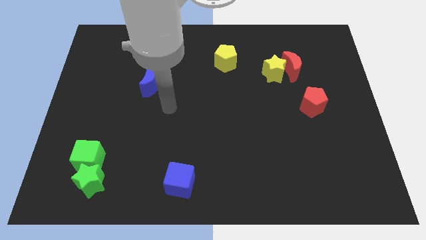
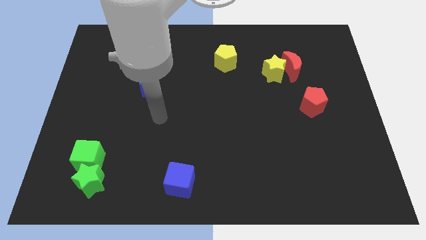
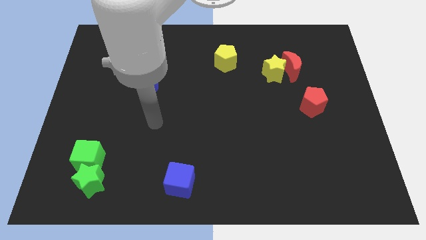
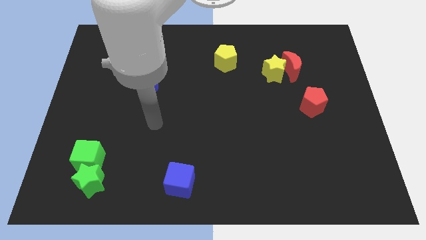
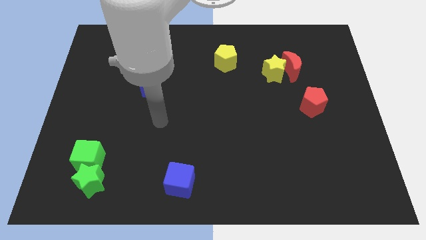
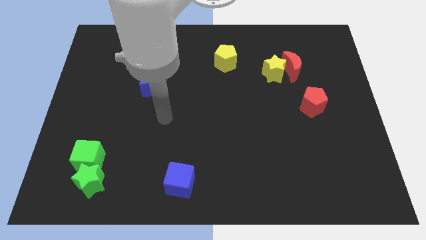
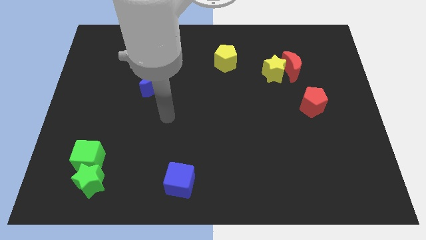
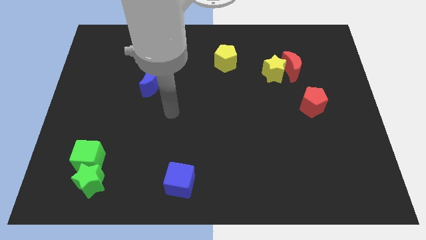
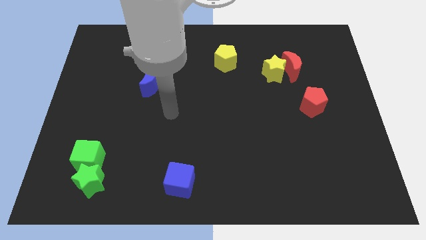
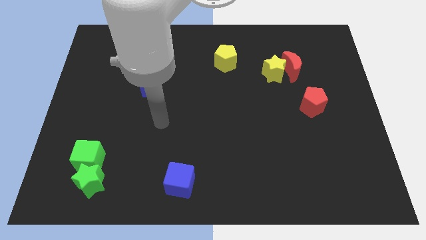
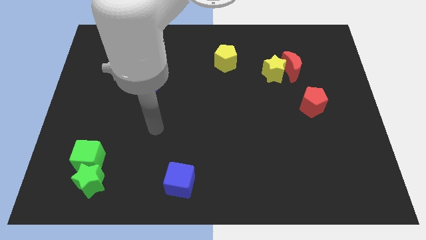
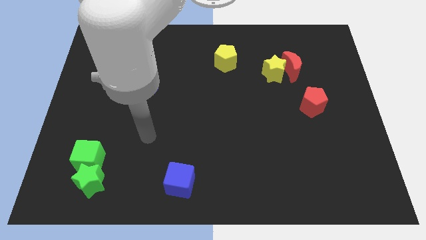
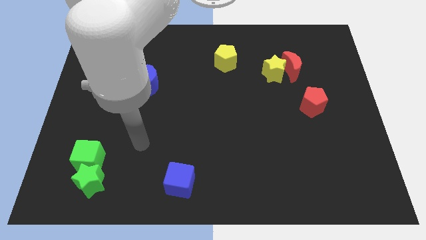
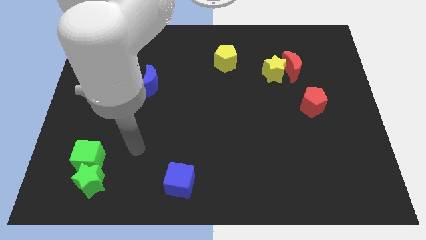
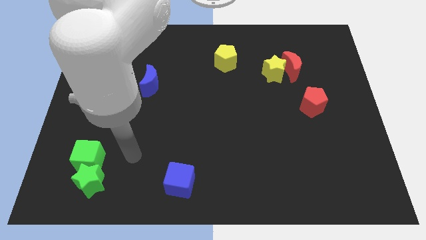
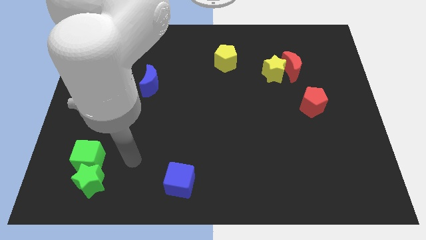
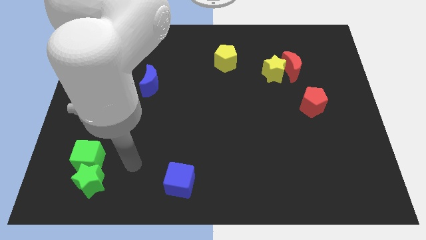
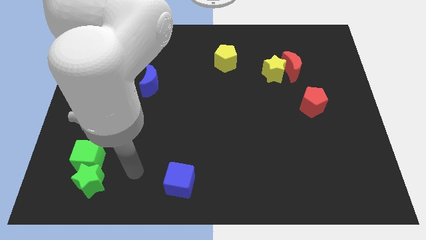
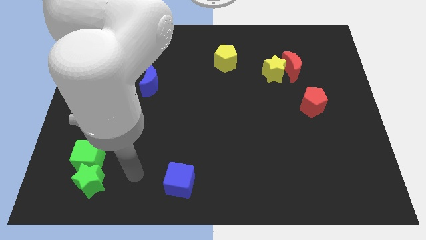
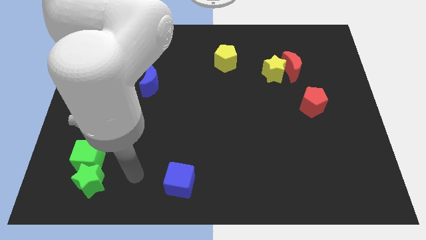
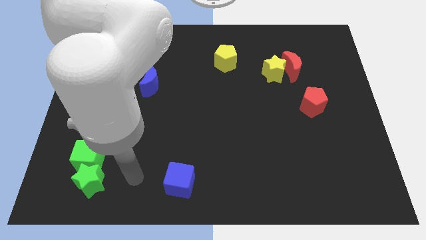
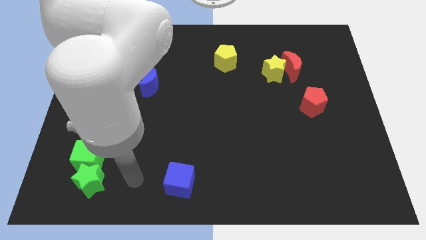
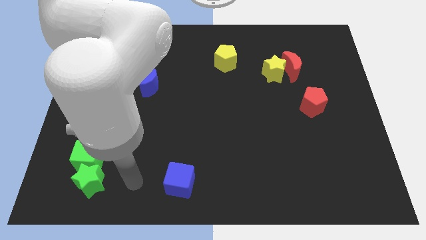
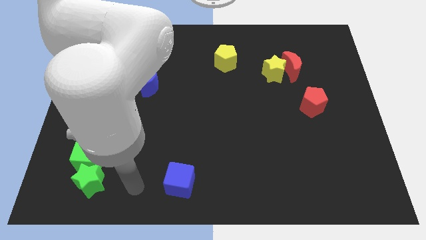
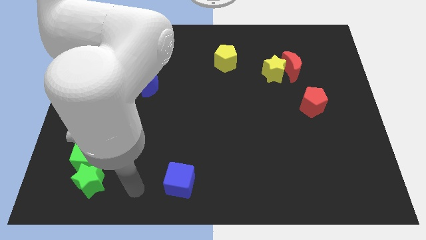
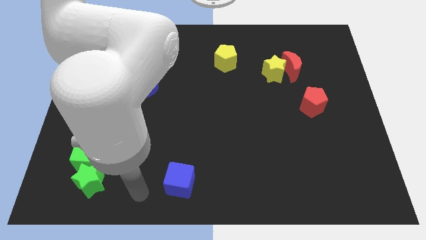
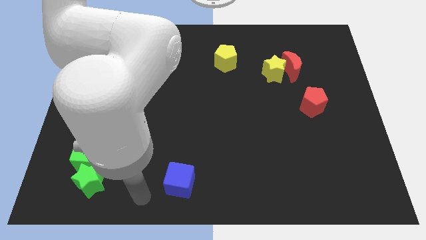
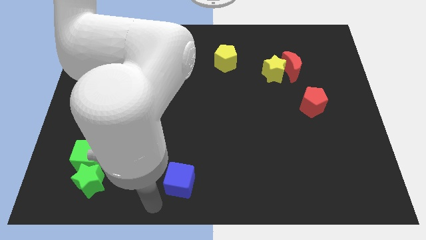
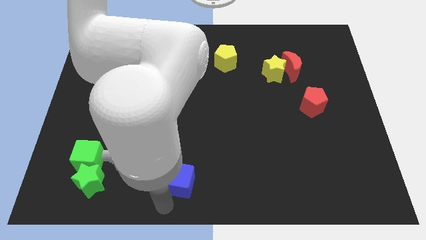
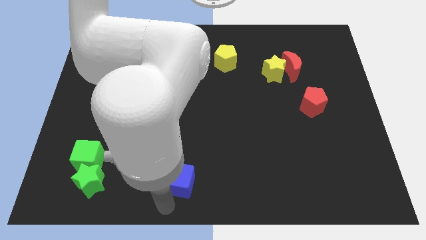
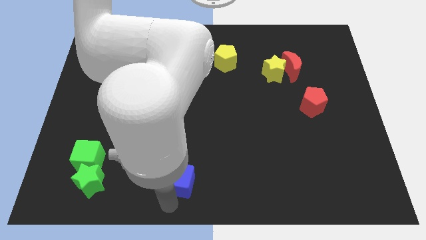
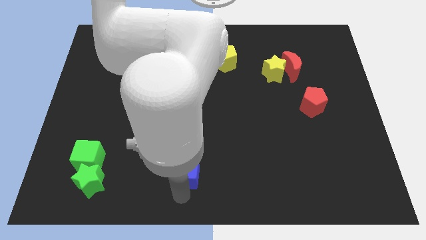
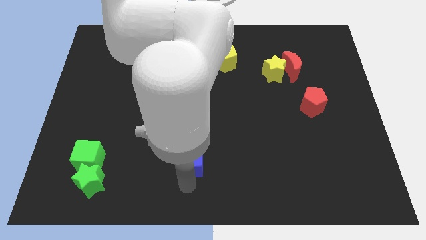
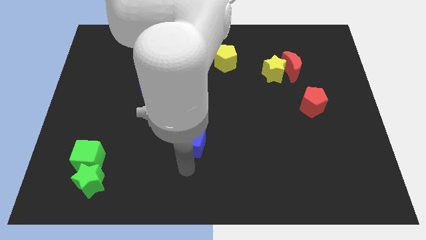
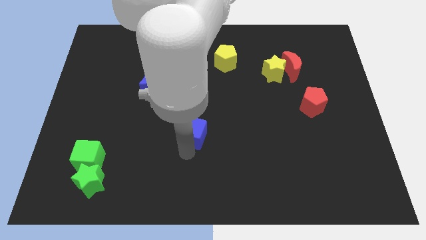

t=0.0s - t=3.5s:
move the blue cube up slightly

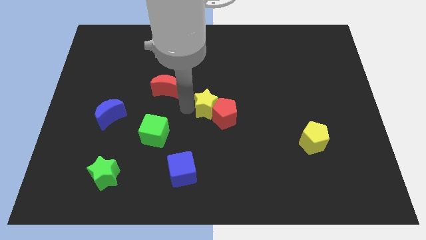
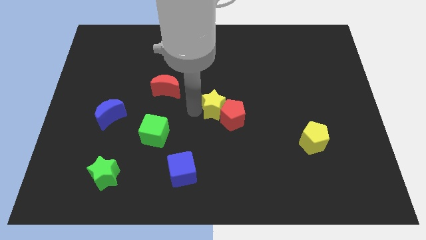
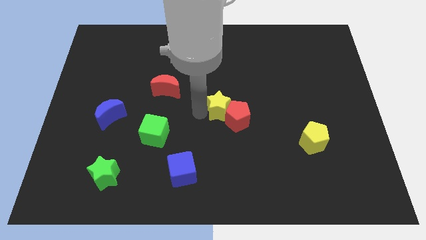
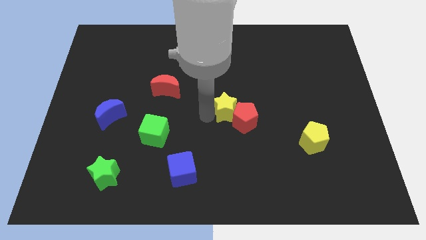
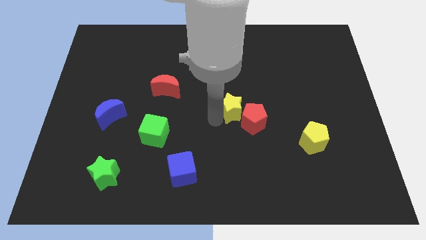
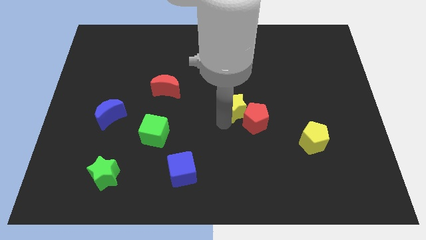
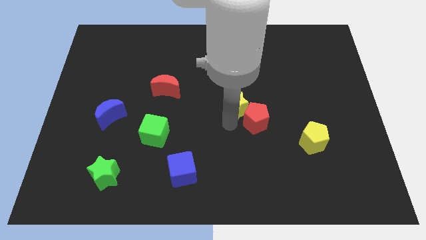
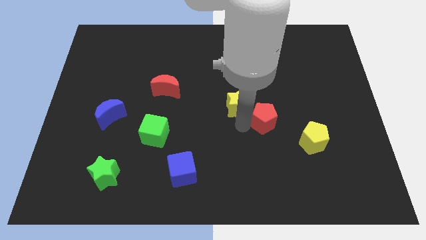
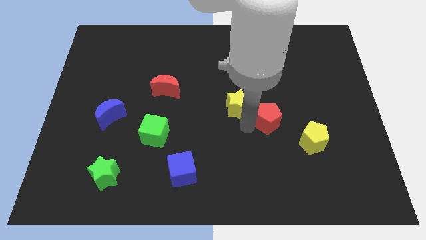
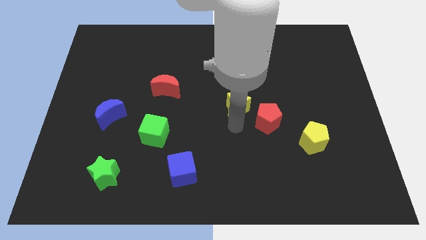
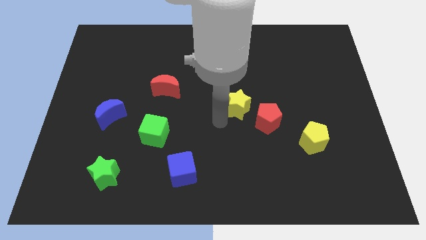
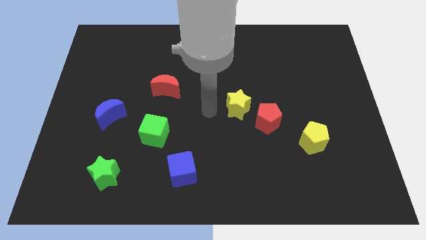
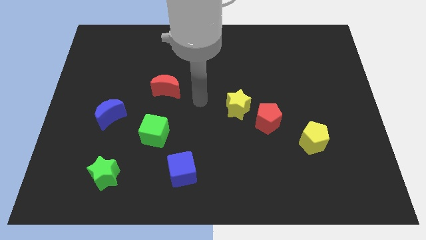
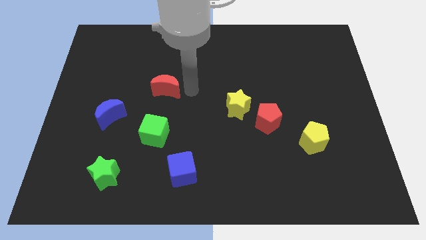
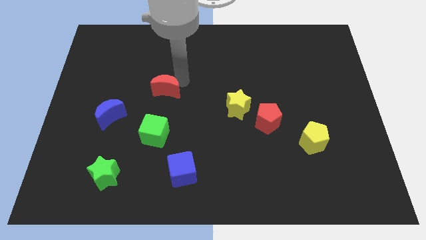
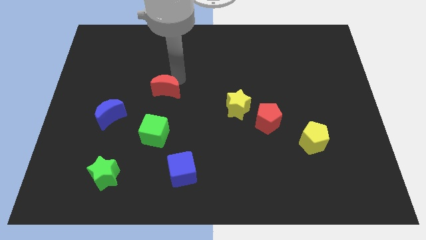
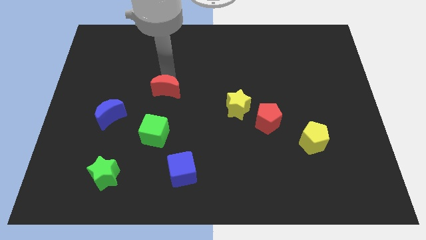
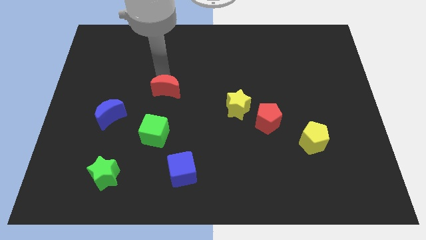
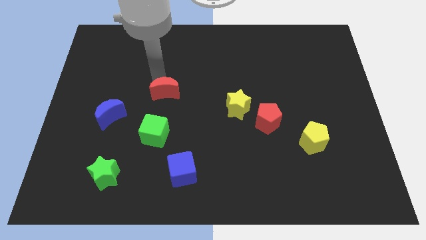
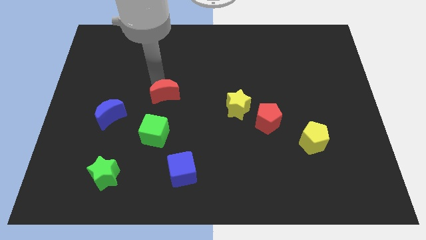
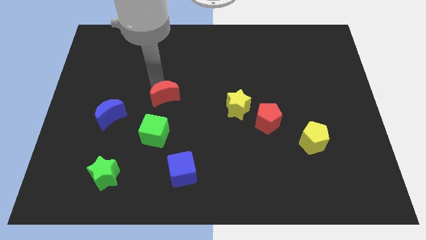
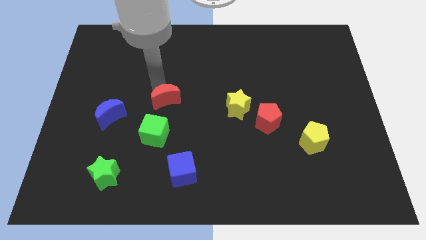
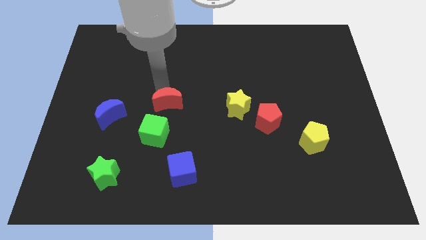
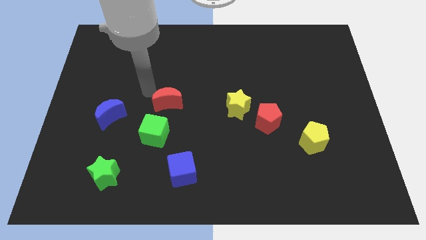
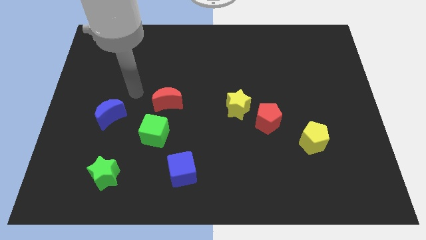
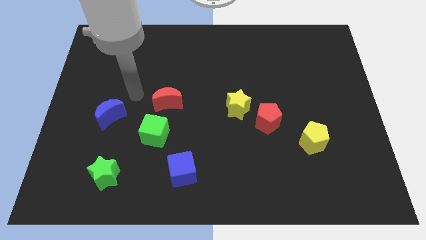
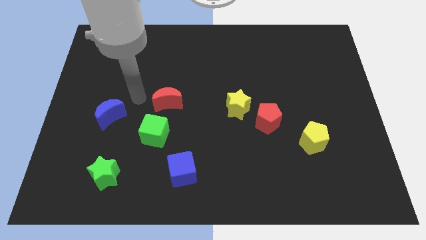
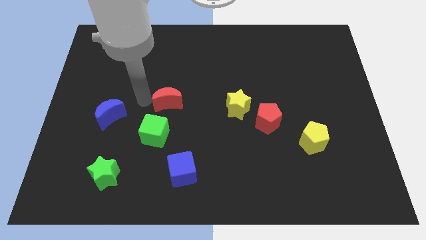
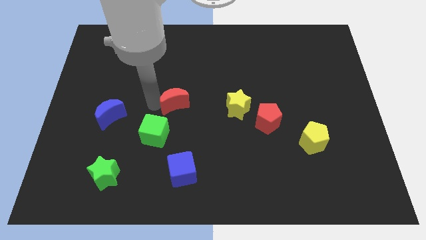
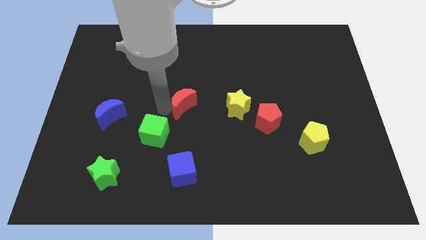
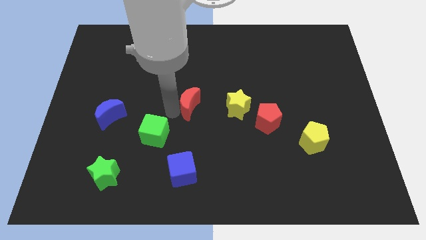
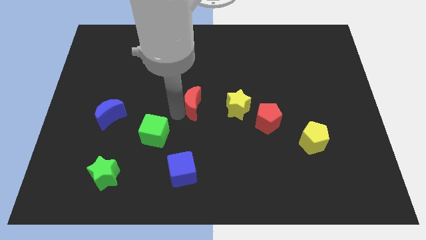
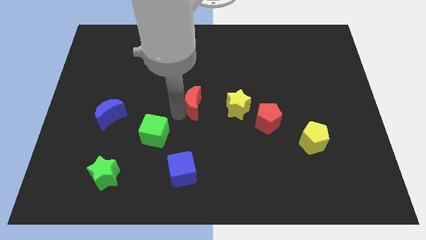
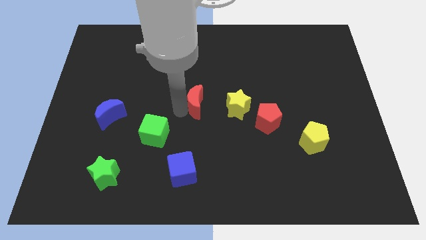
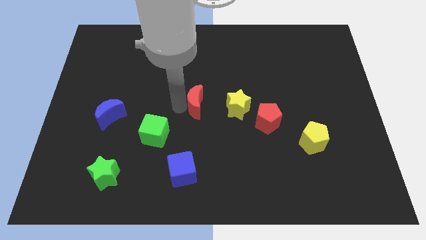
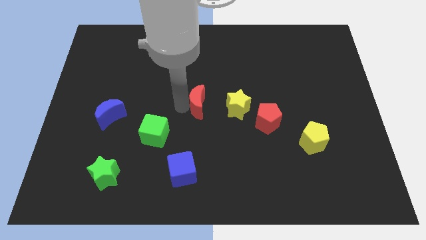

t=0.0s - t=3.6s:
place the red moon to the left of the yellow star

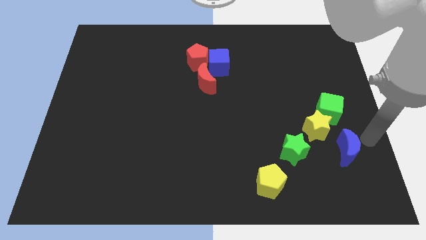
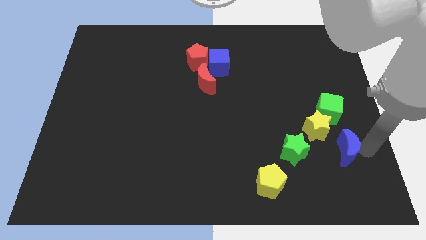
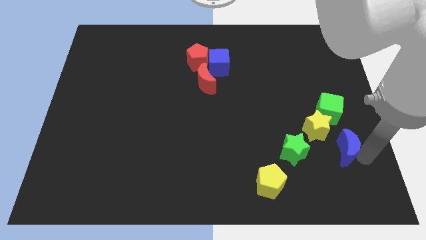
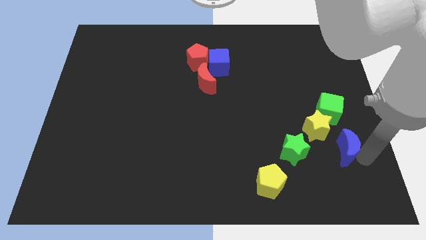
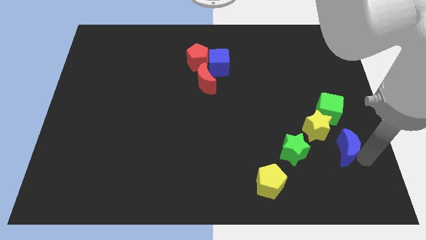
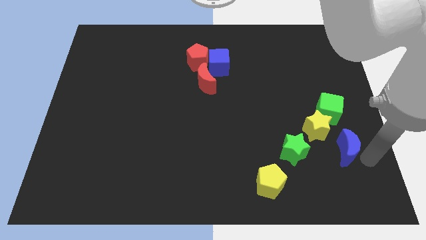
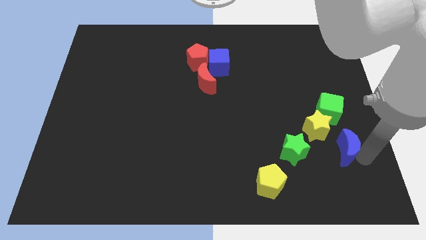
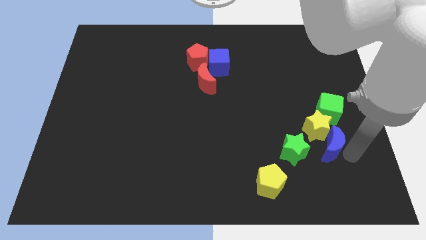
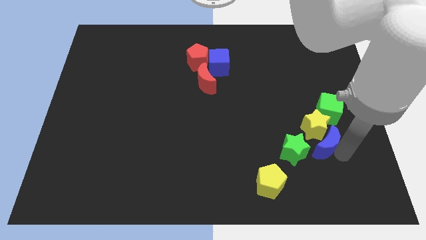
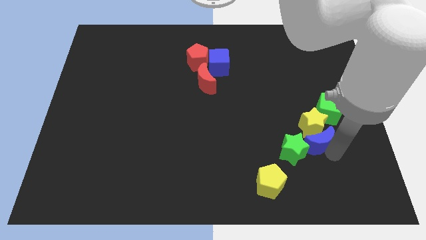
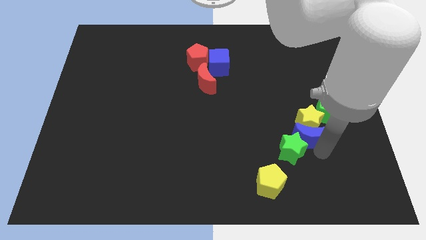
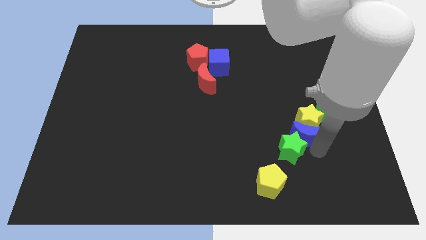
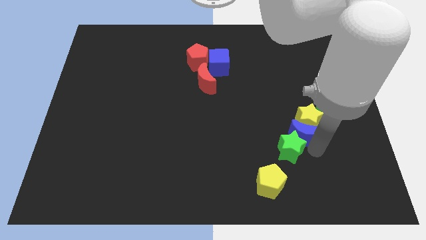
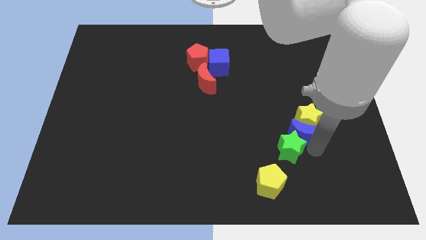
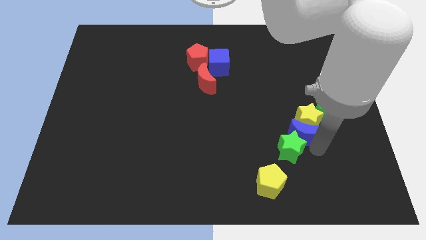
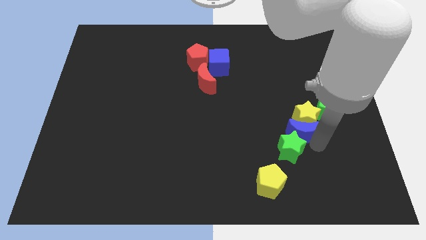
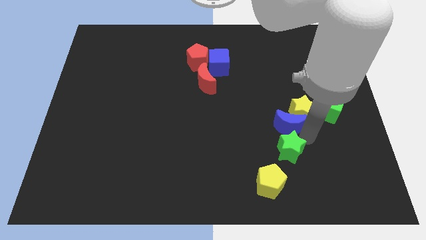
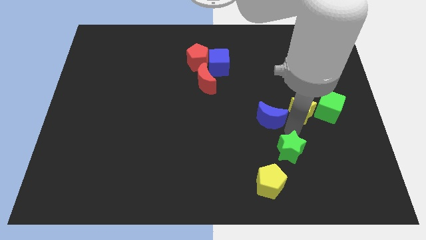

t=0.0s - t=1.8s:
push the blue crescent into the yellow star

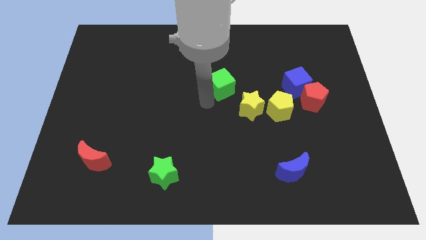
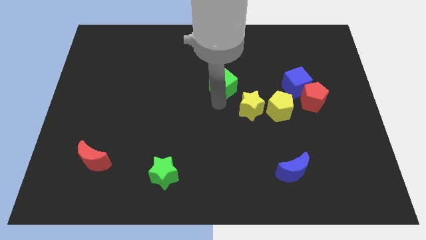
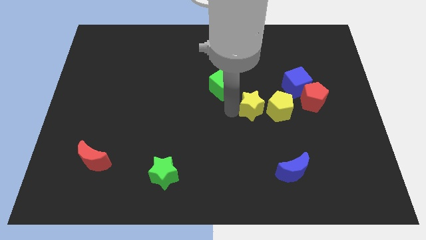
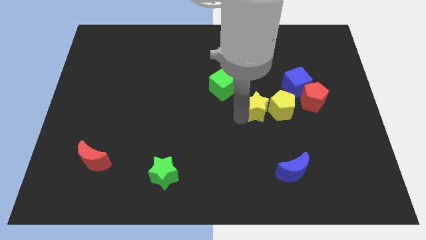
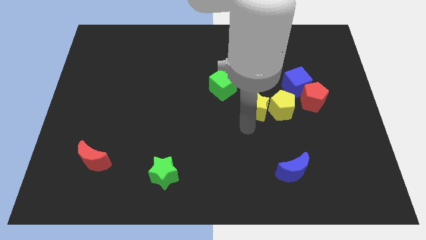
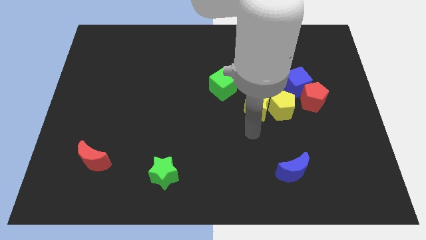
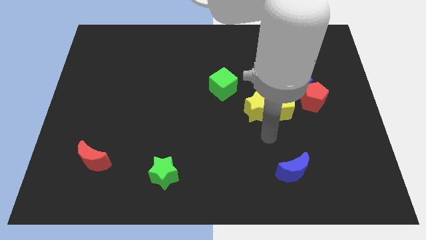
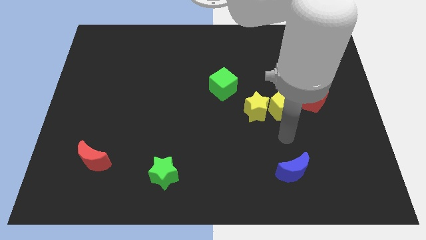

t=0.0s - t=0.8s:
move your hand in between the yellow pentagon and blue moon
